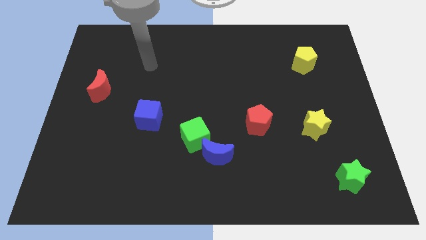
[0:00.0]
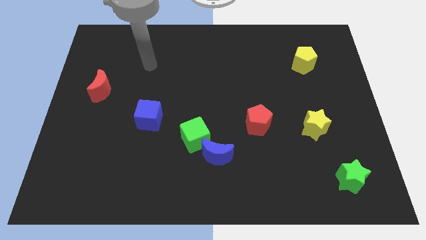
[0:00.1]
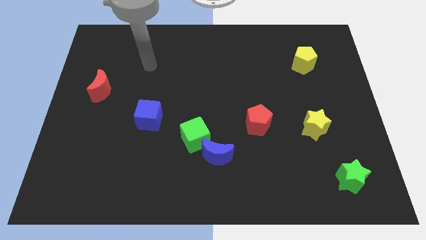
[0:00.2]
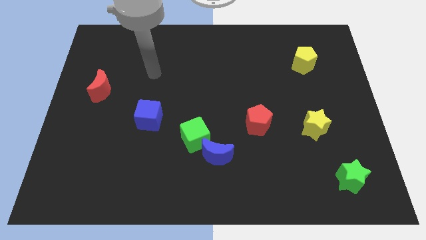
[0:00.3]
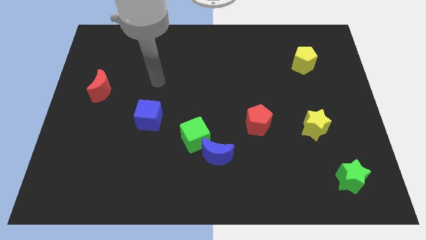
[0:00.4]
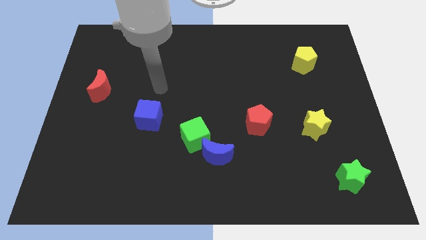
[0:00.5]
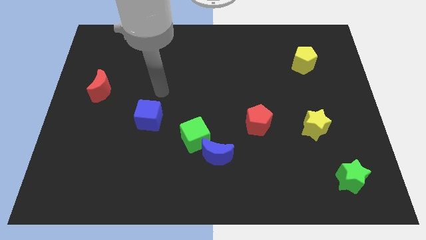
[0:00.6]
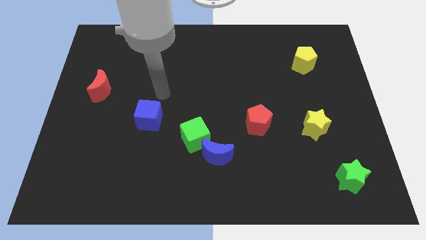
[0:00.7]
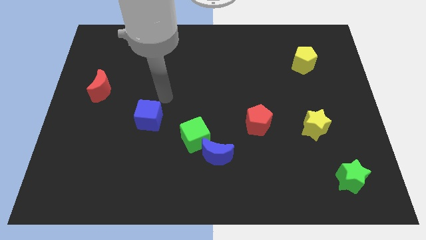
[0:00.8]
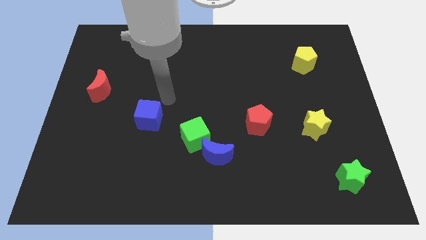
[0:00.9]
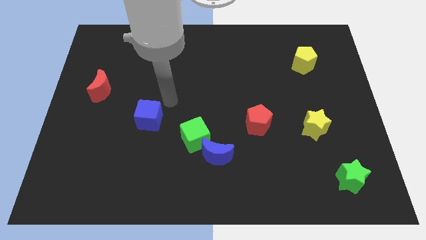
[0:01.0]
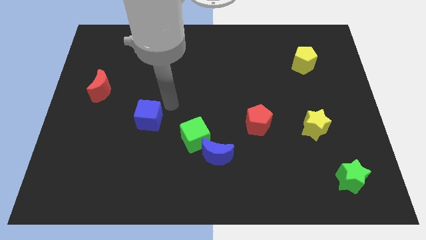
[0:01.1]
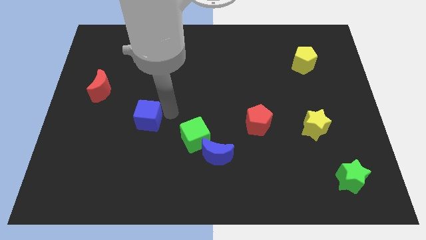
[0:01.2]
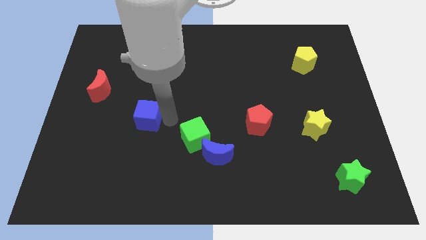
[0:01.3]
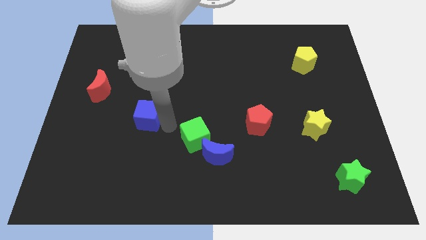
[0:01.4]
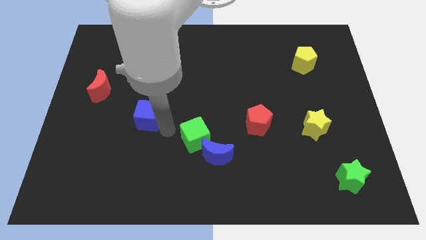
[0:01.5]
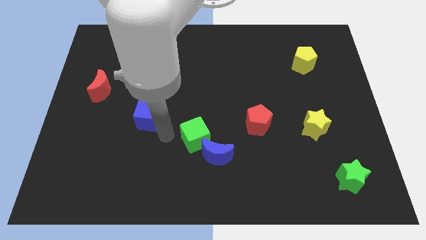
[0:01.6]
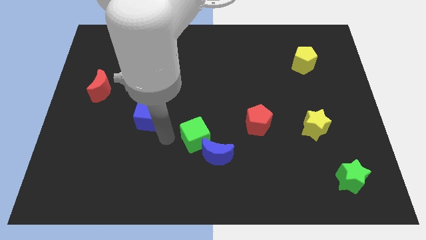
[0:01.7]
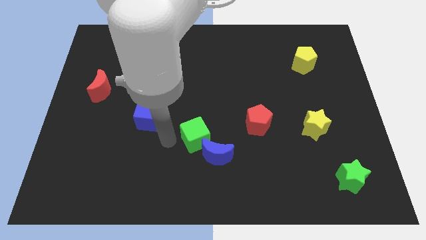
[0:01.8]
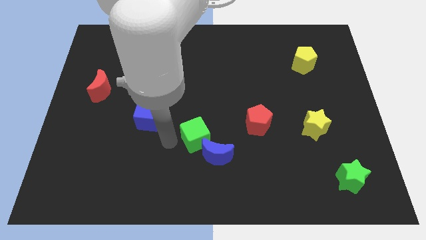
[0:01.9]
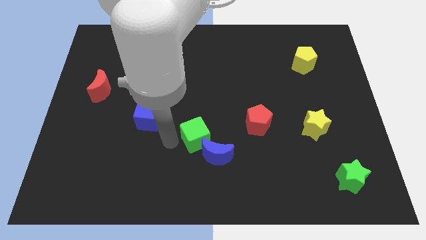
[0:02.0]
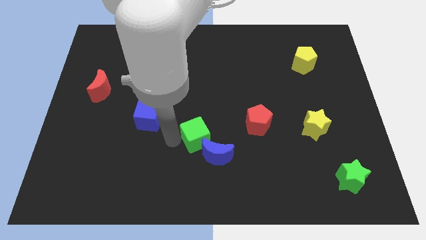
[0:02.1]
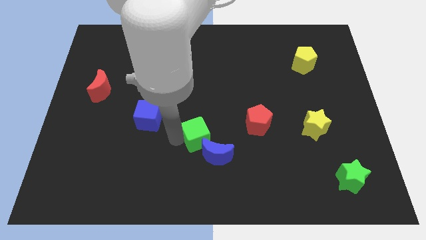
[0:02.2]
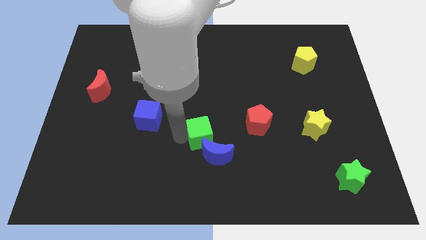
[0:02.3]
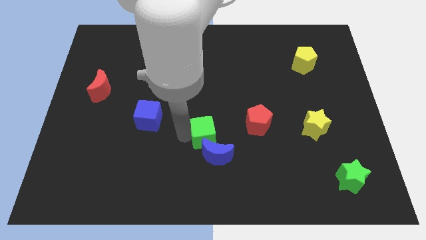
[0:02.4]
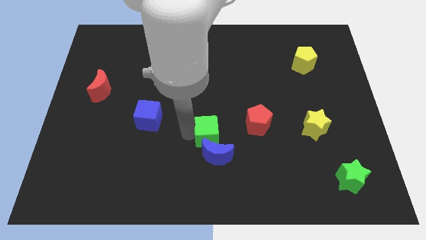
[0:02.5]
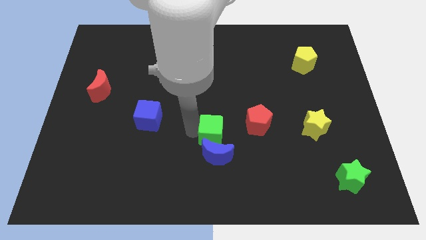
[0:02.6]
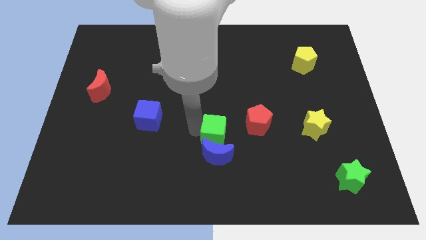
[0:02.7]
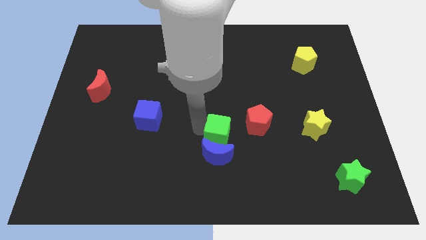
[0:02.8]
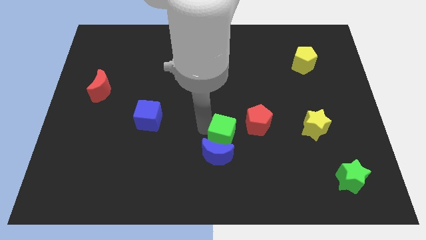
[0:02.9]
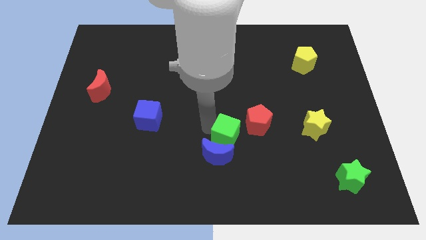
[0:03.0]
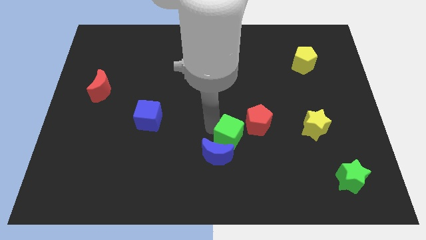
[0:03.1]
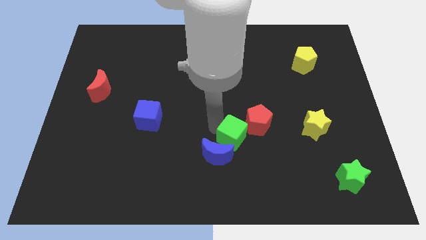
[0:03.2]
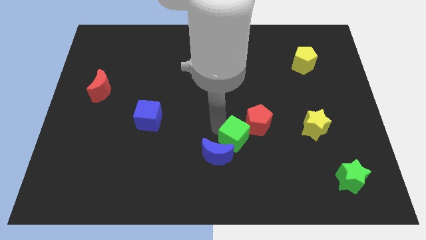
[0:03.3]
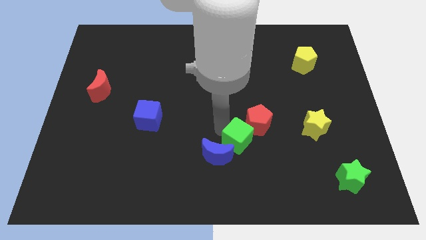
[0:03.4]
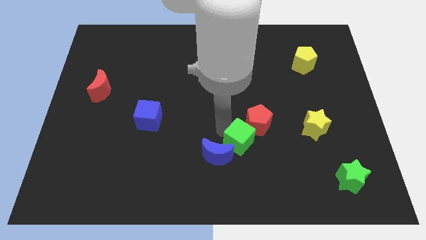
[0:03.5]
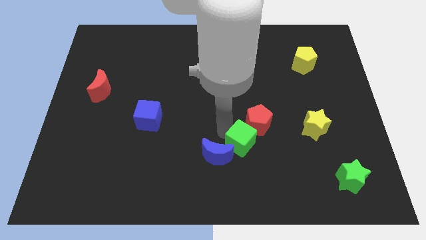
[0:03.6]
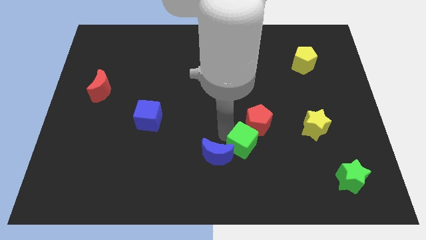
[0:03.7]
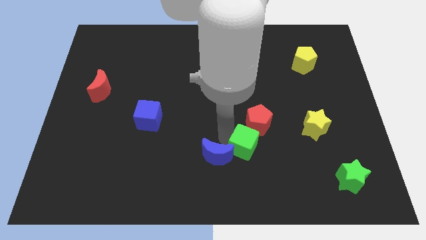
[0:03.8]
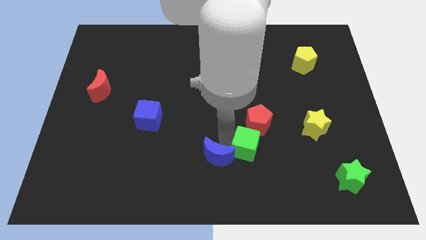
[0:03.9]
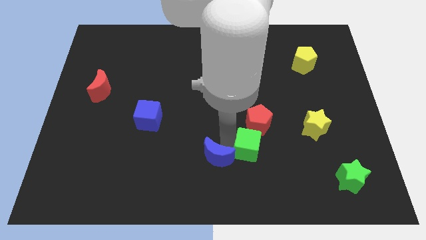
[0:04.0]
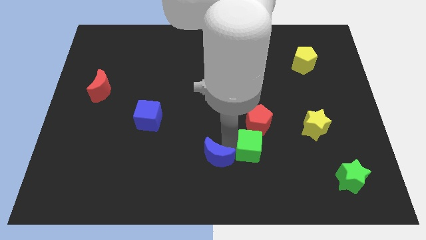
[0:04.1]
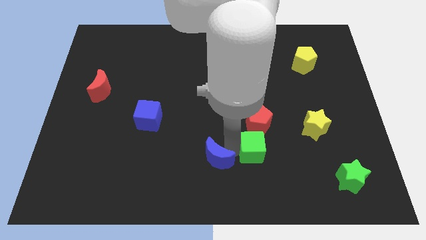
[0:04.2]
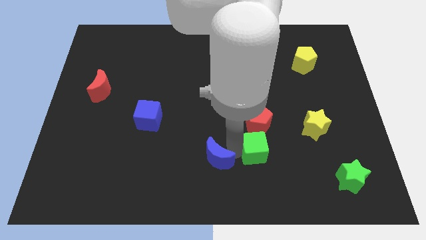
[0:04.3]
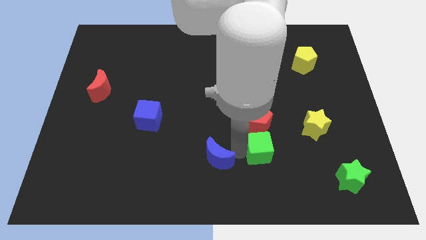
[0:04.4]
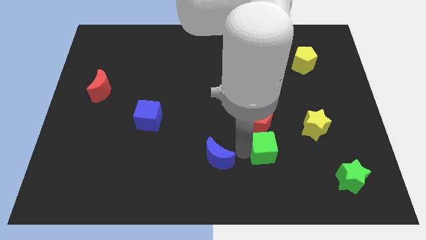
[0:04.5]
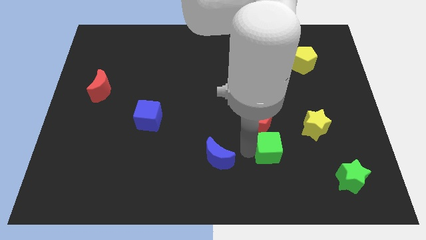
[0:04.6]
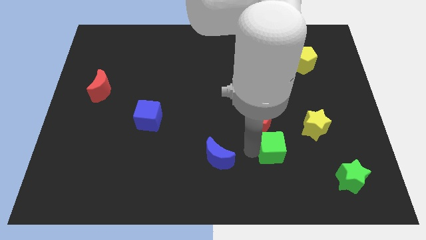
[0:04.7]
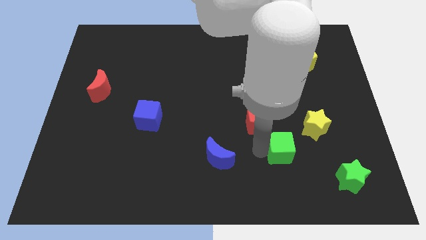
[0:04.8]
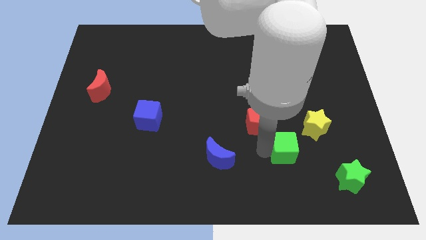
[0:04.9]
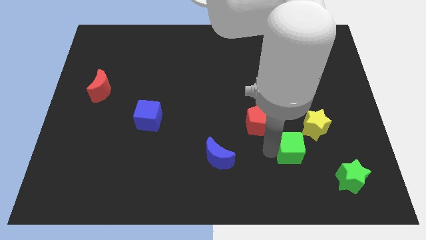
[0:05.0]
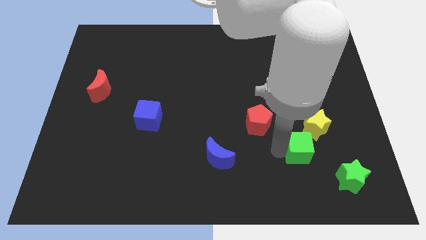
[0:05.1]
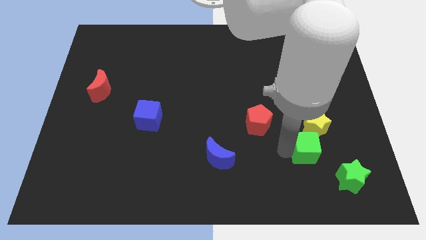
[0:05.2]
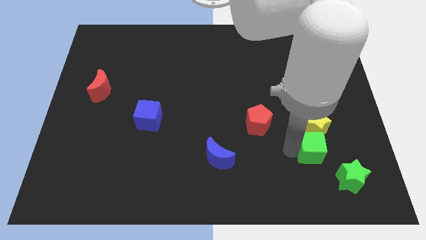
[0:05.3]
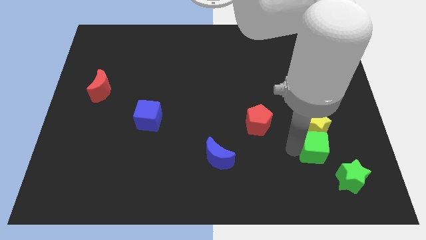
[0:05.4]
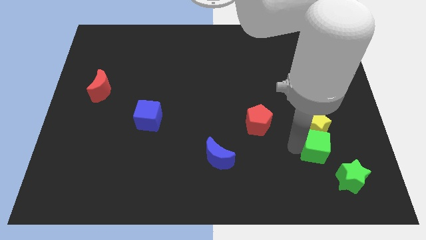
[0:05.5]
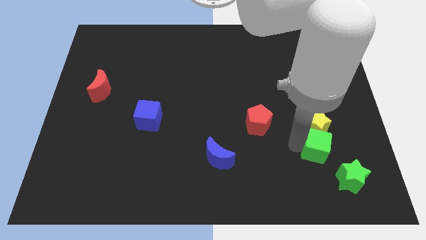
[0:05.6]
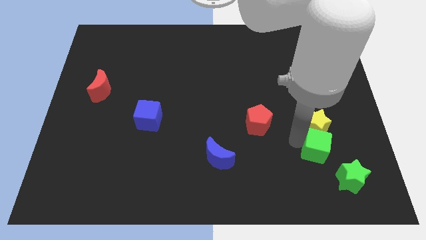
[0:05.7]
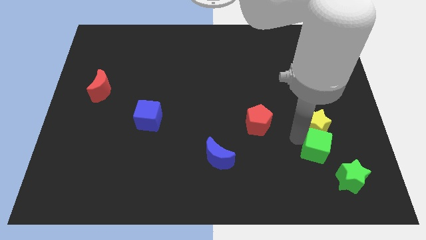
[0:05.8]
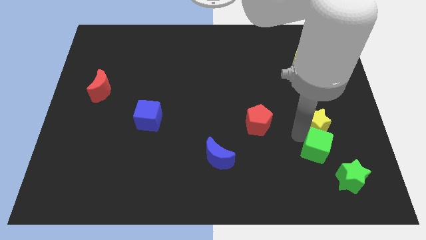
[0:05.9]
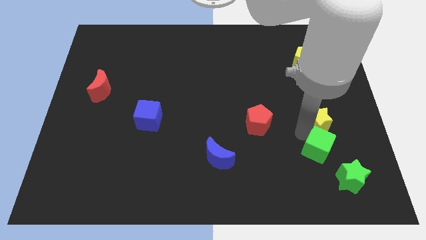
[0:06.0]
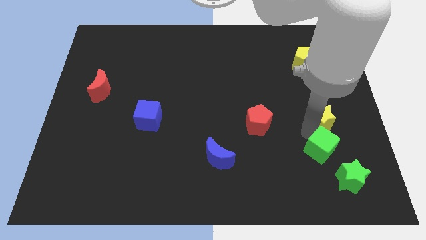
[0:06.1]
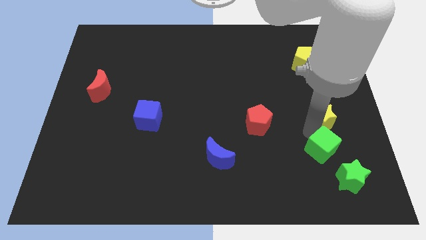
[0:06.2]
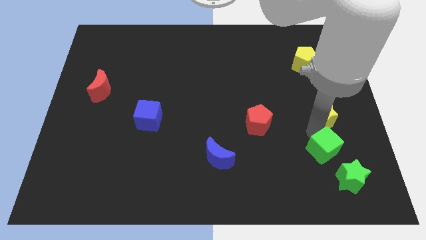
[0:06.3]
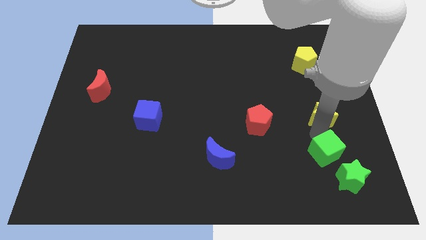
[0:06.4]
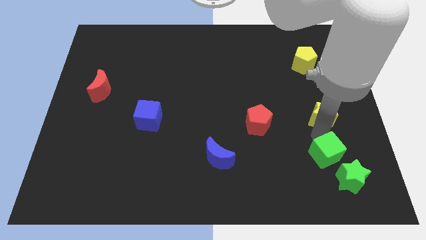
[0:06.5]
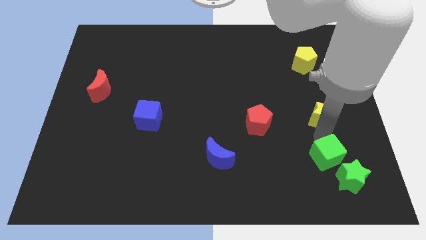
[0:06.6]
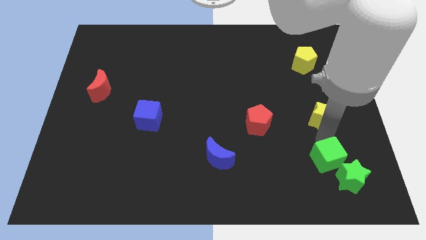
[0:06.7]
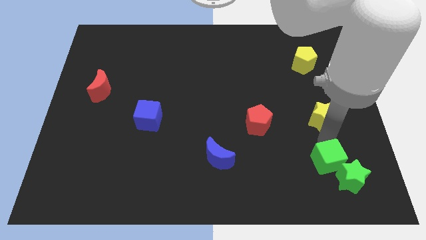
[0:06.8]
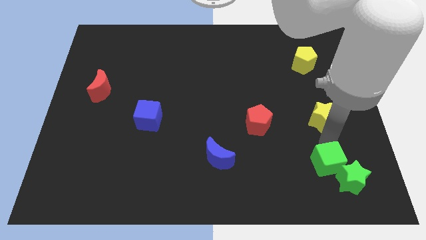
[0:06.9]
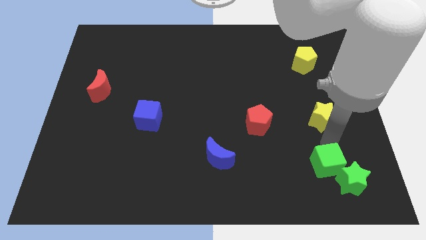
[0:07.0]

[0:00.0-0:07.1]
push the green cube next to the green star

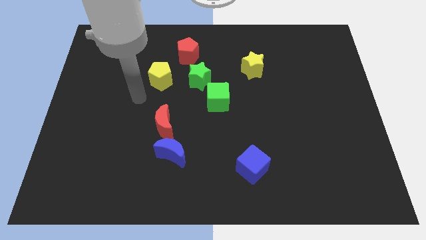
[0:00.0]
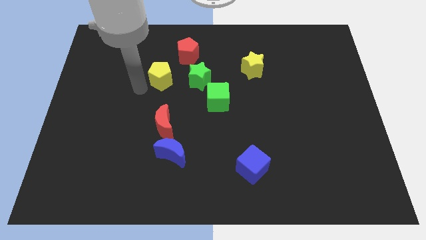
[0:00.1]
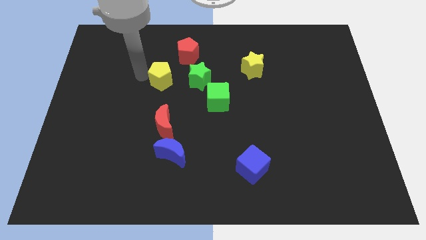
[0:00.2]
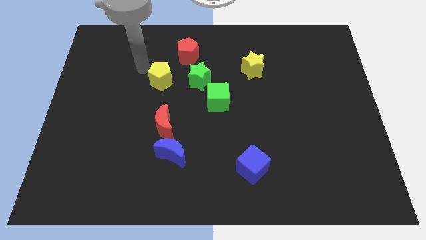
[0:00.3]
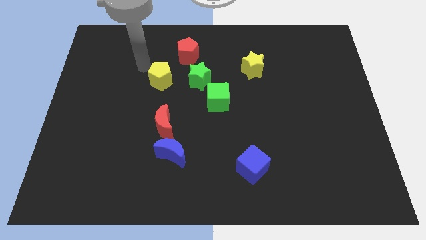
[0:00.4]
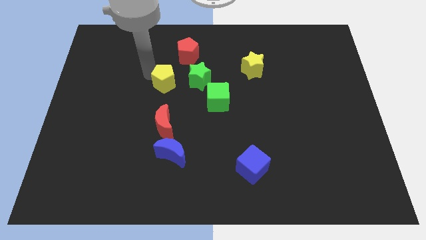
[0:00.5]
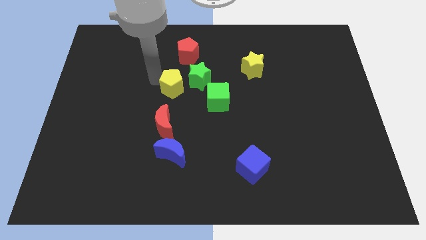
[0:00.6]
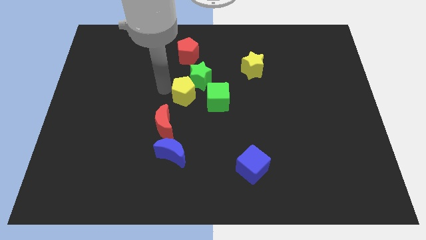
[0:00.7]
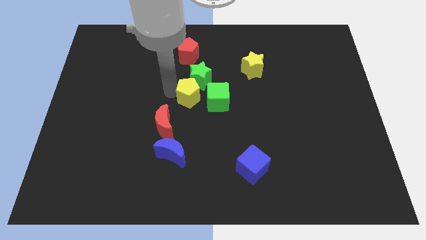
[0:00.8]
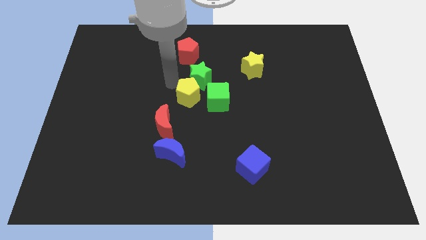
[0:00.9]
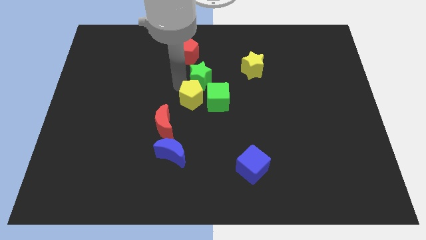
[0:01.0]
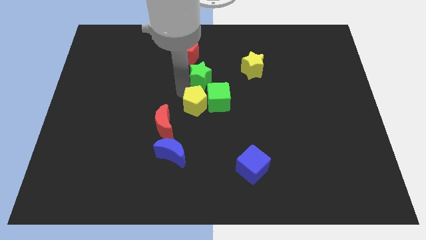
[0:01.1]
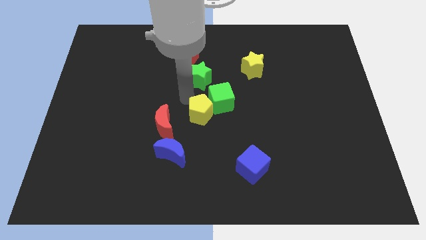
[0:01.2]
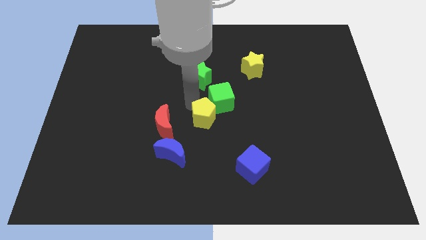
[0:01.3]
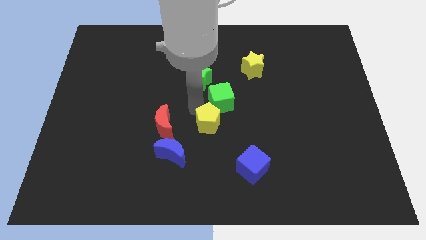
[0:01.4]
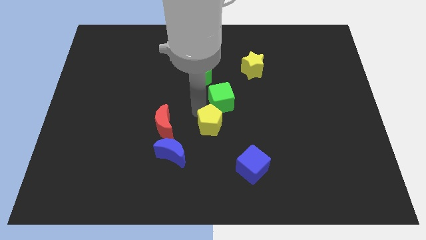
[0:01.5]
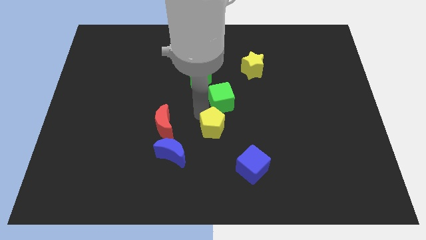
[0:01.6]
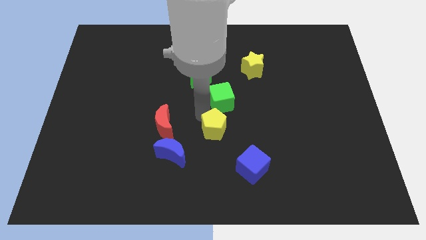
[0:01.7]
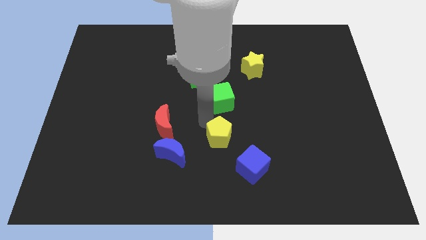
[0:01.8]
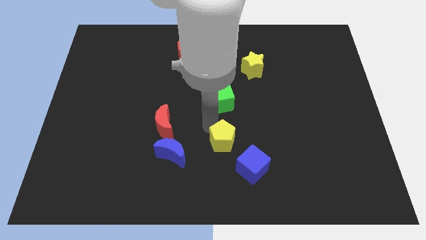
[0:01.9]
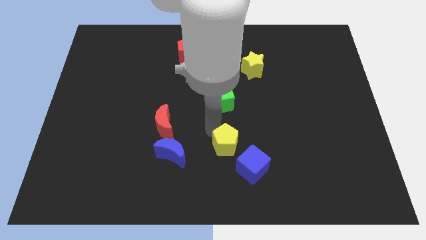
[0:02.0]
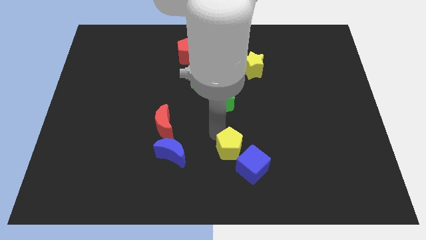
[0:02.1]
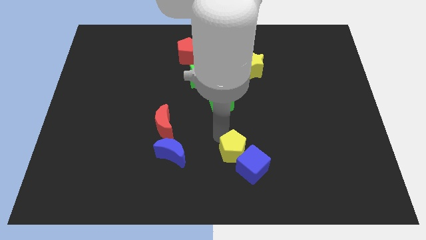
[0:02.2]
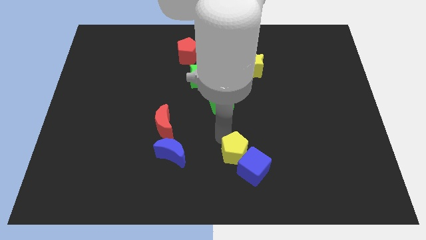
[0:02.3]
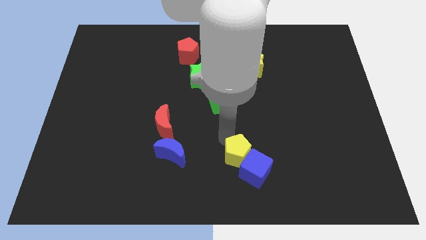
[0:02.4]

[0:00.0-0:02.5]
put the yellow pentagon close to the blue cube
